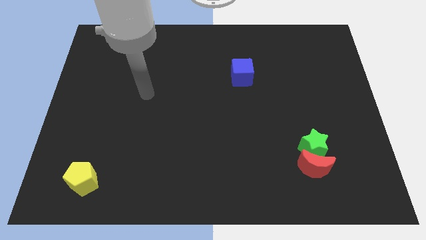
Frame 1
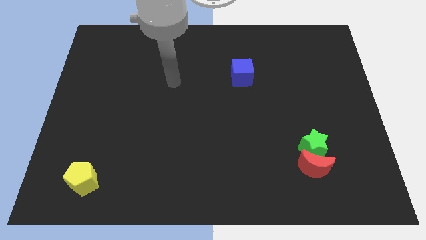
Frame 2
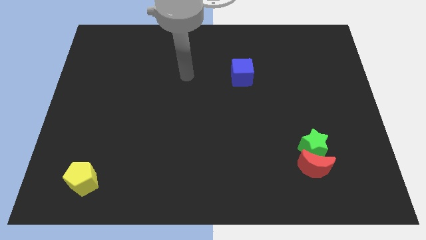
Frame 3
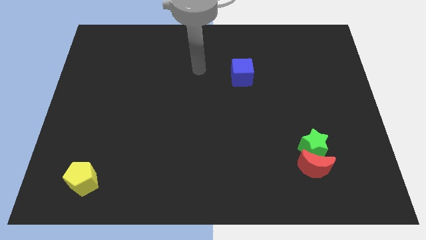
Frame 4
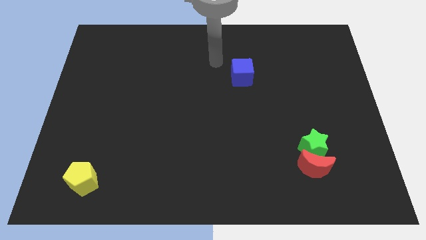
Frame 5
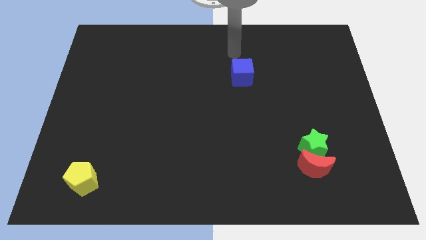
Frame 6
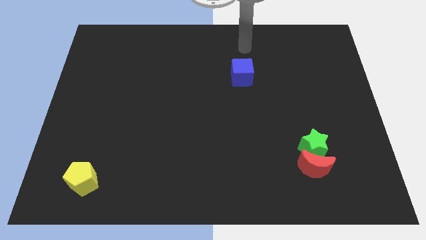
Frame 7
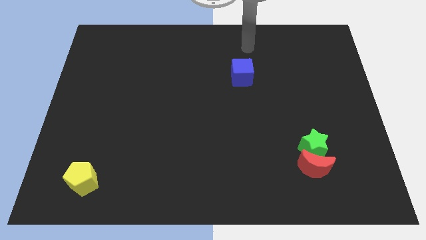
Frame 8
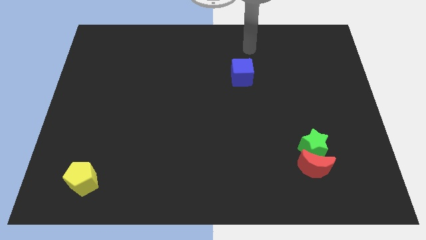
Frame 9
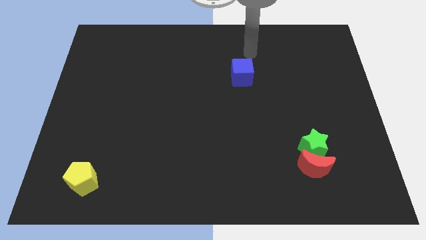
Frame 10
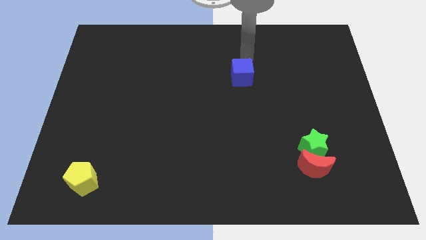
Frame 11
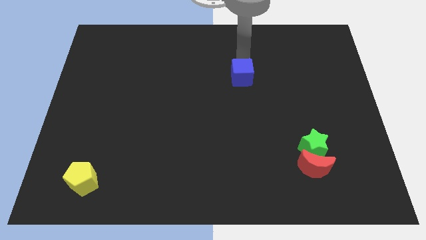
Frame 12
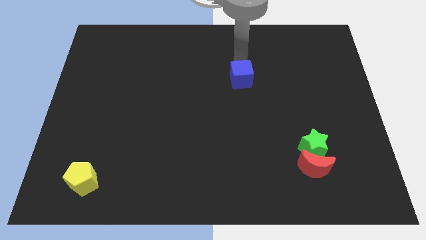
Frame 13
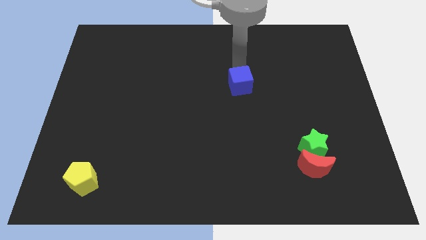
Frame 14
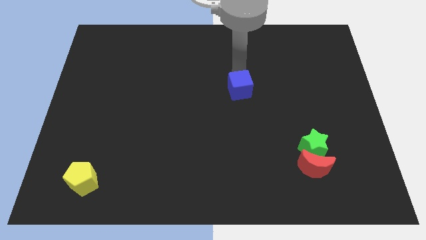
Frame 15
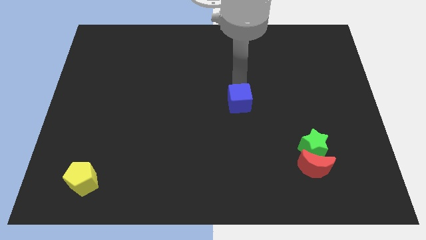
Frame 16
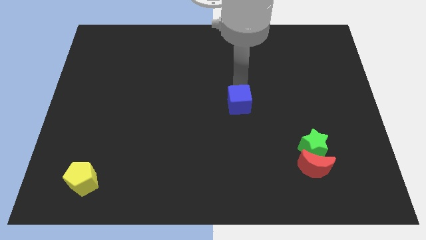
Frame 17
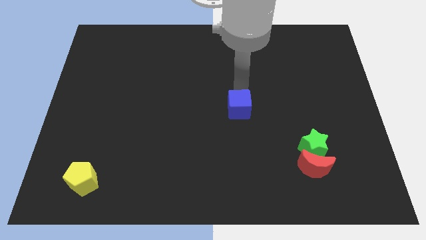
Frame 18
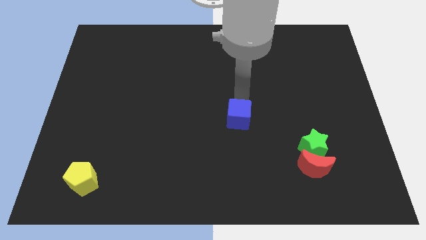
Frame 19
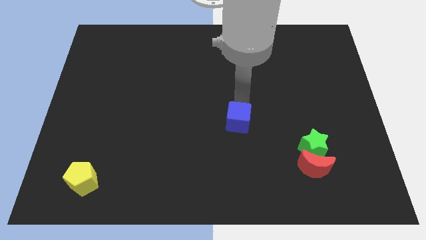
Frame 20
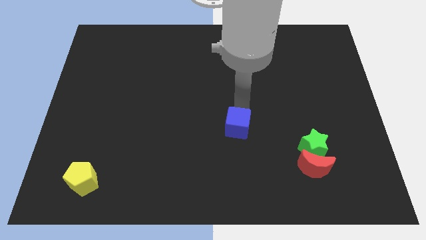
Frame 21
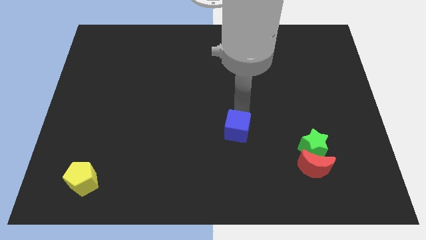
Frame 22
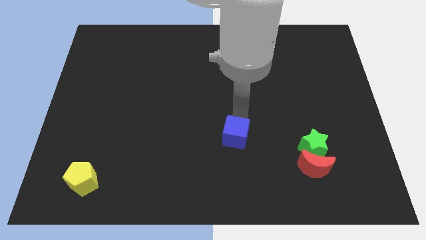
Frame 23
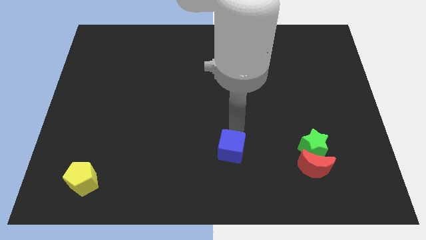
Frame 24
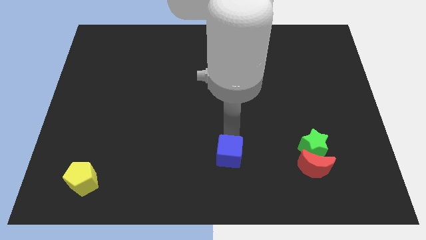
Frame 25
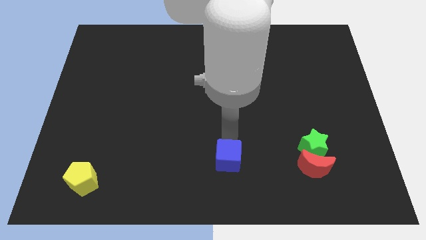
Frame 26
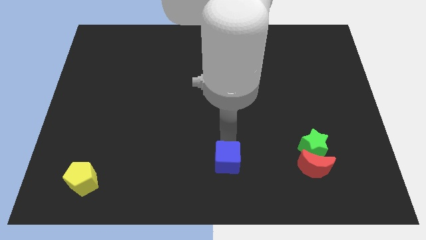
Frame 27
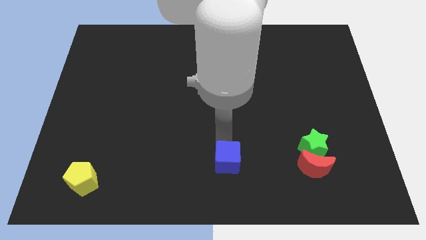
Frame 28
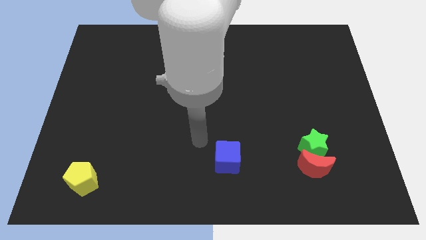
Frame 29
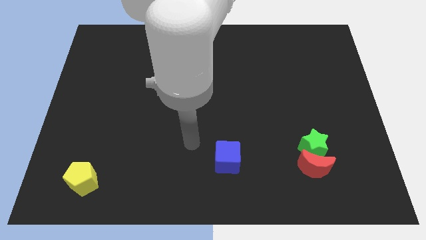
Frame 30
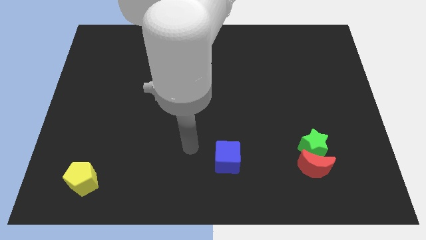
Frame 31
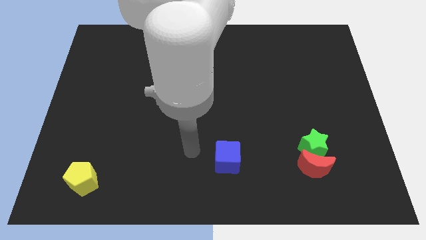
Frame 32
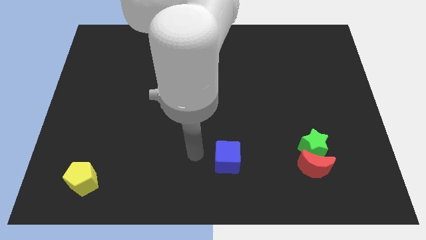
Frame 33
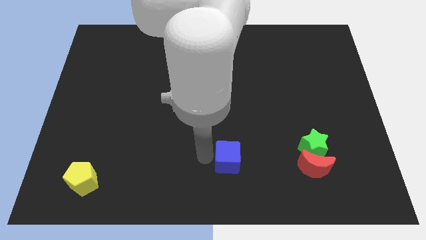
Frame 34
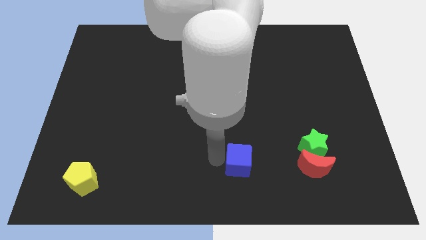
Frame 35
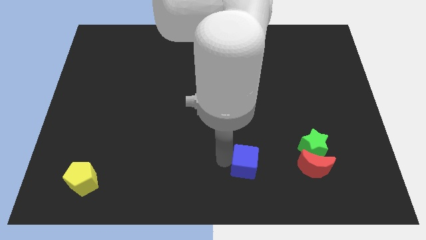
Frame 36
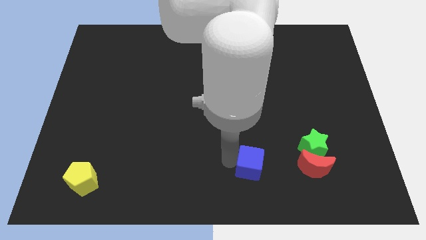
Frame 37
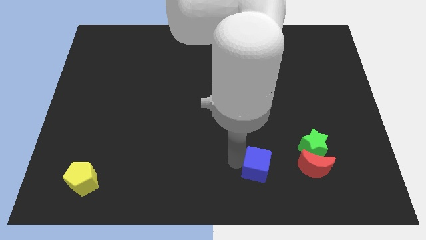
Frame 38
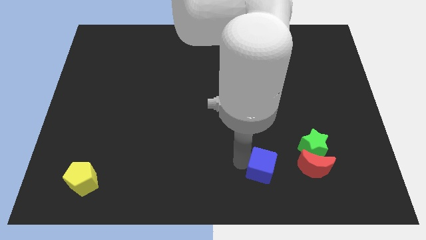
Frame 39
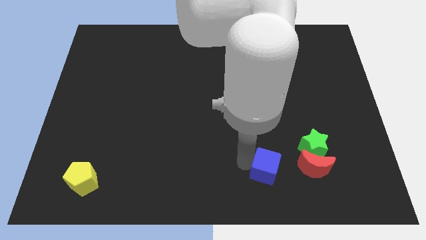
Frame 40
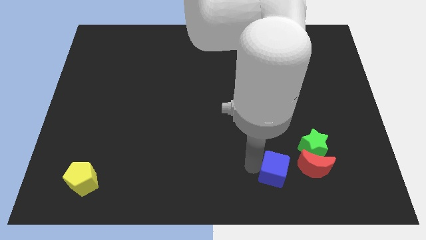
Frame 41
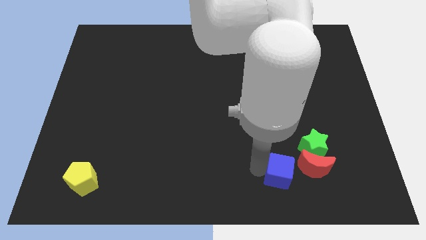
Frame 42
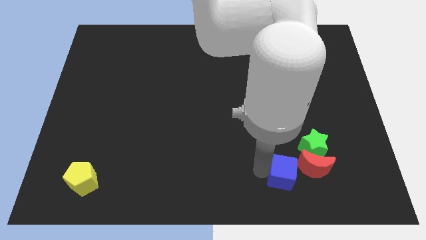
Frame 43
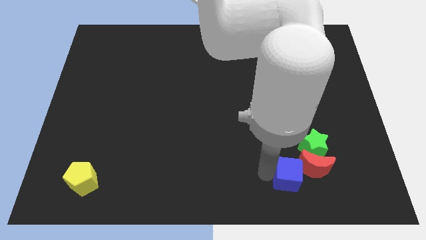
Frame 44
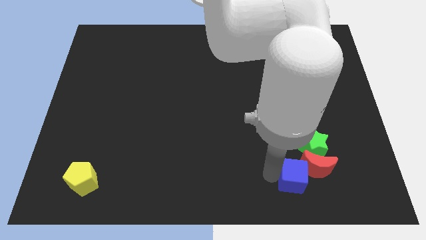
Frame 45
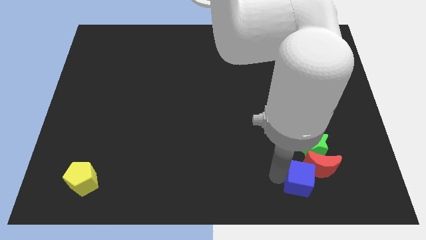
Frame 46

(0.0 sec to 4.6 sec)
put the blue cube next to the red moon

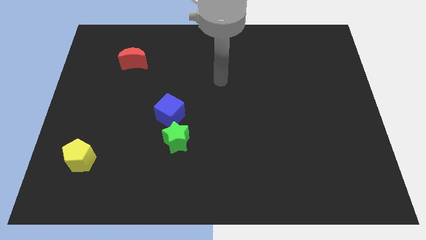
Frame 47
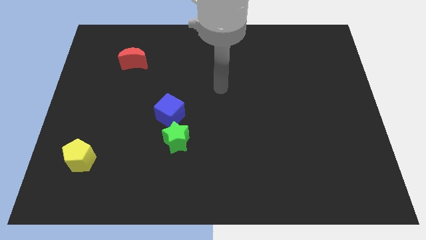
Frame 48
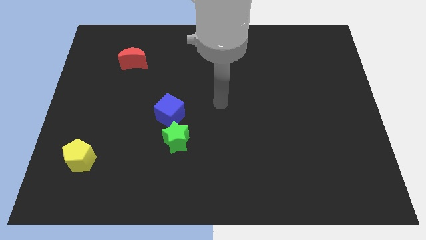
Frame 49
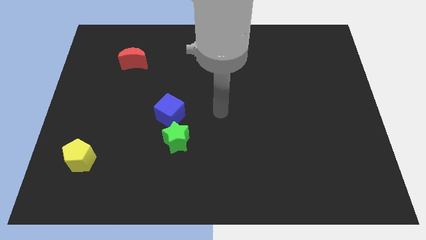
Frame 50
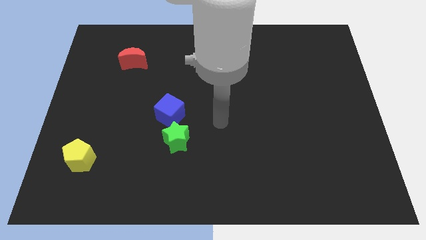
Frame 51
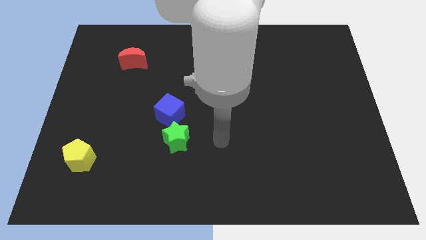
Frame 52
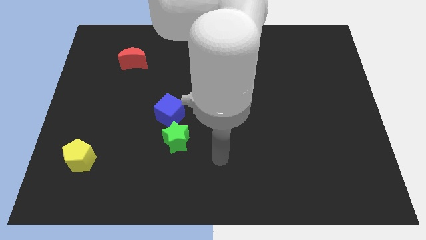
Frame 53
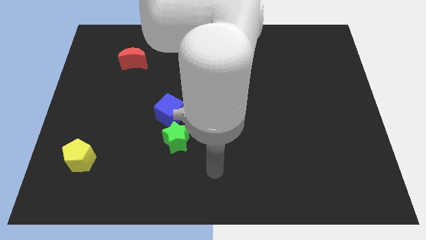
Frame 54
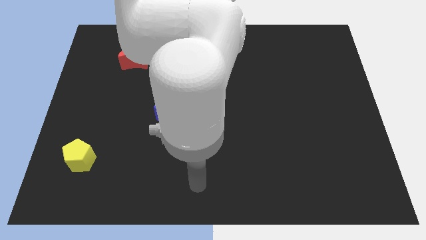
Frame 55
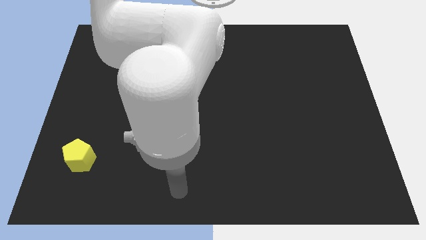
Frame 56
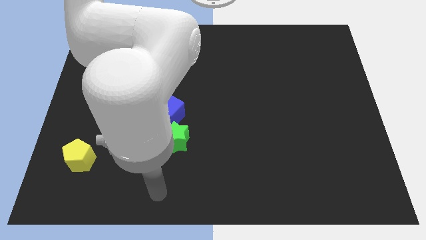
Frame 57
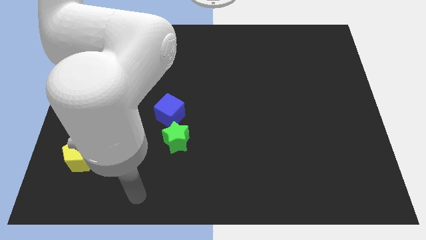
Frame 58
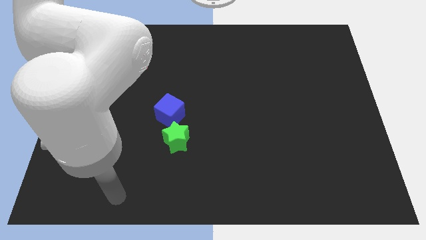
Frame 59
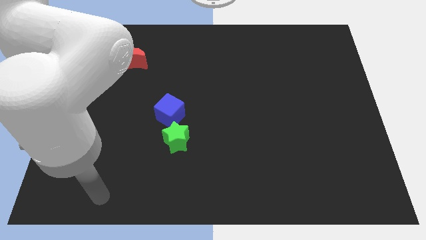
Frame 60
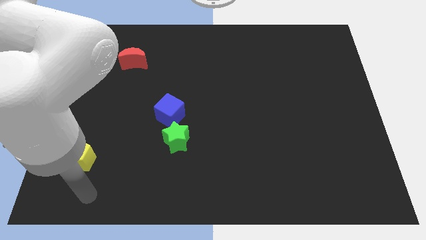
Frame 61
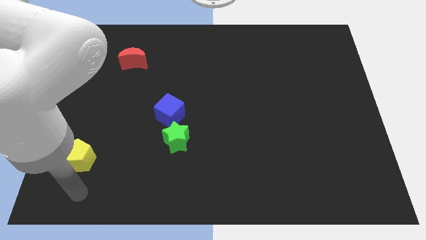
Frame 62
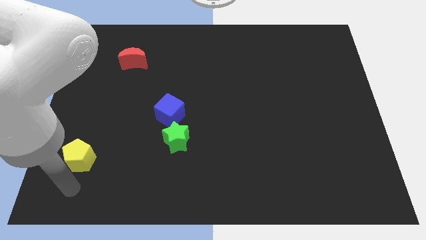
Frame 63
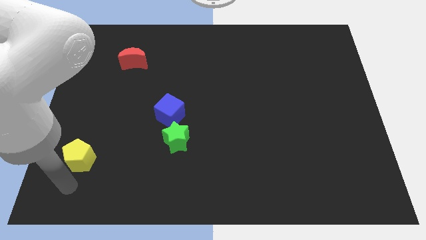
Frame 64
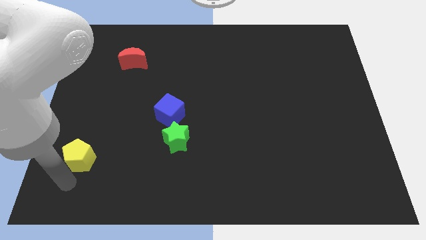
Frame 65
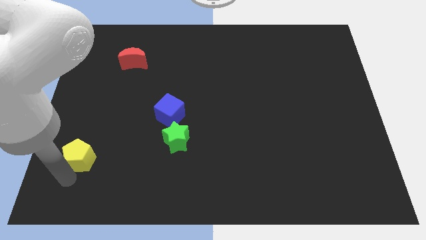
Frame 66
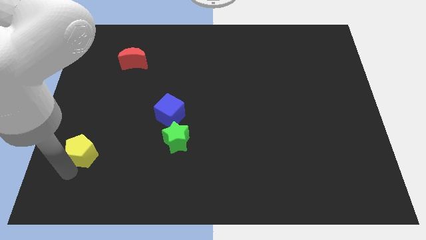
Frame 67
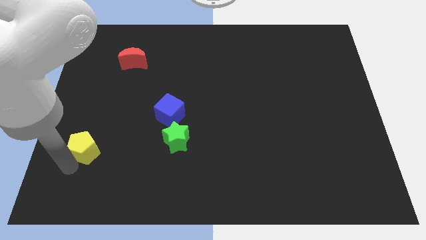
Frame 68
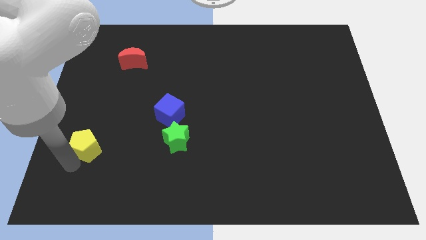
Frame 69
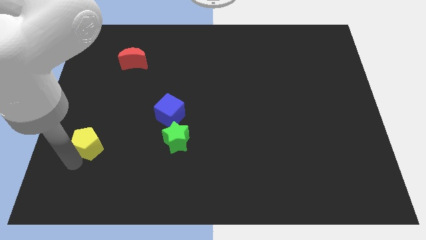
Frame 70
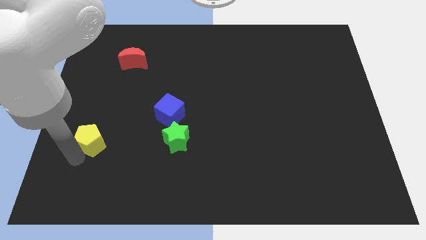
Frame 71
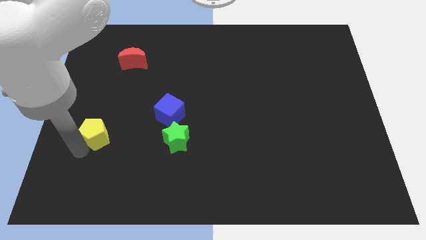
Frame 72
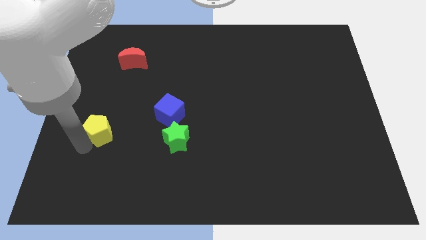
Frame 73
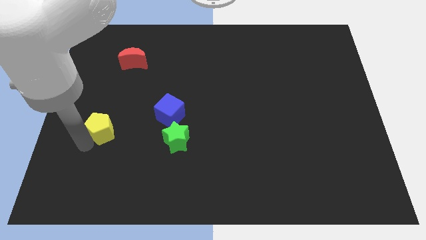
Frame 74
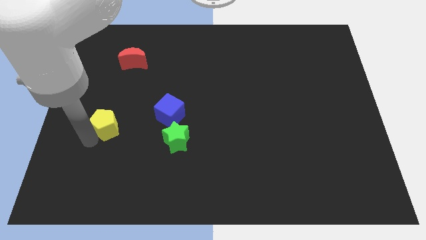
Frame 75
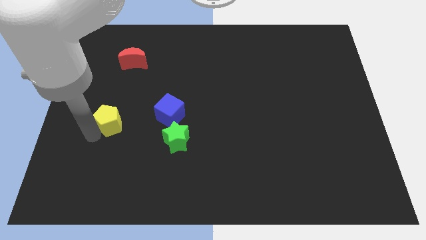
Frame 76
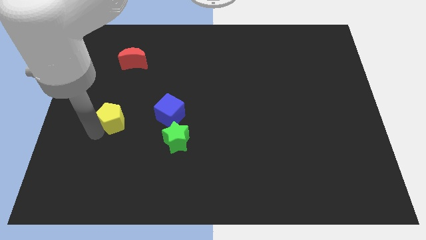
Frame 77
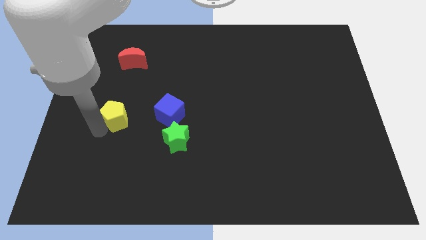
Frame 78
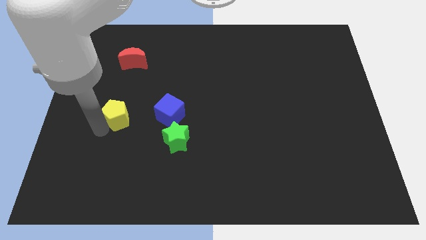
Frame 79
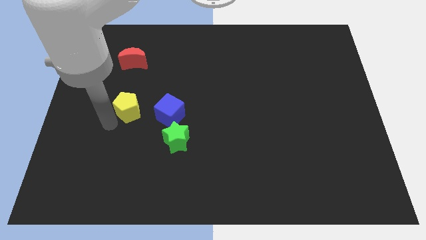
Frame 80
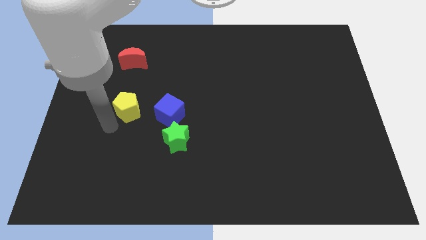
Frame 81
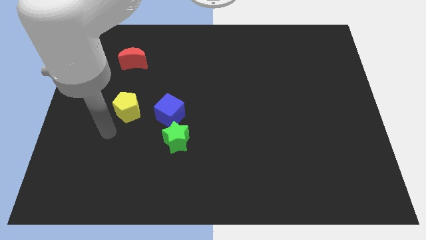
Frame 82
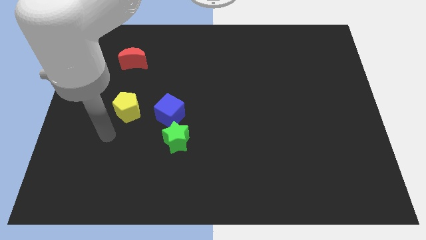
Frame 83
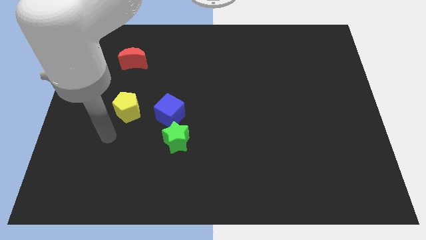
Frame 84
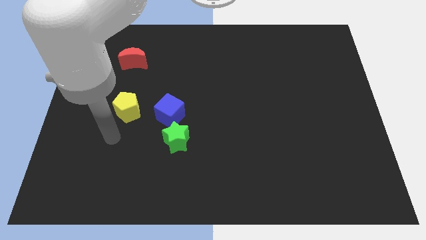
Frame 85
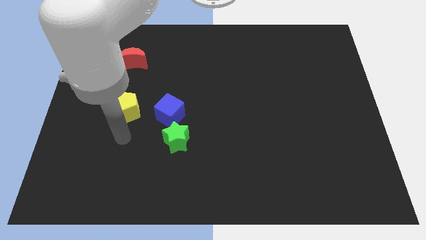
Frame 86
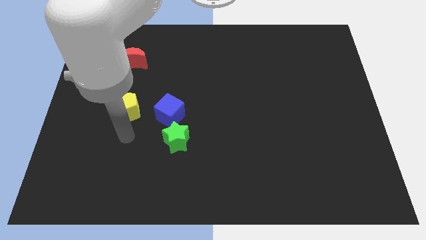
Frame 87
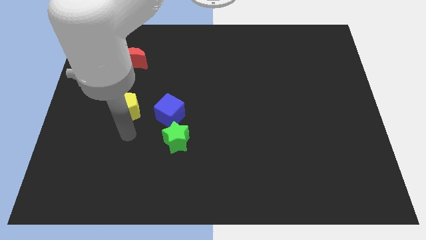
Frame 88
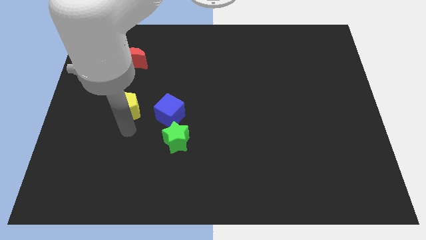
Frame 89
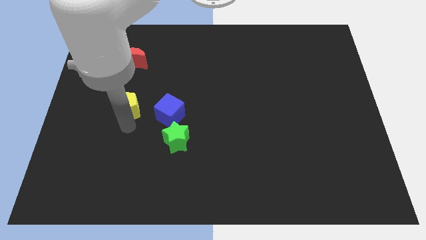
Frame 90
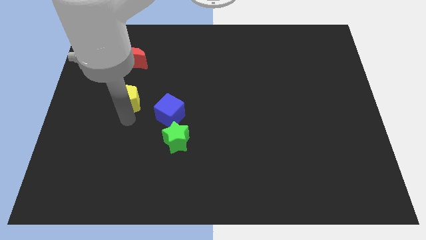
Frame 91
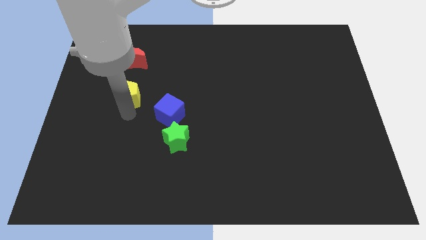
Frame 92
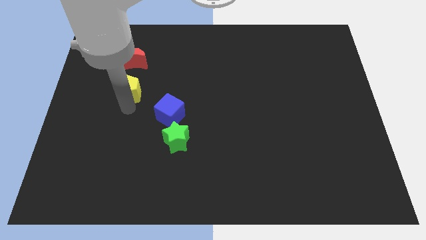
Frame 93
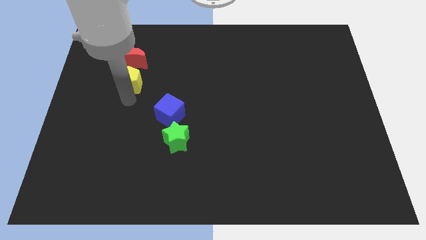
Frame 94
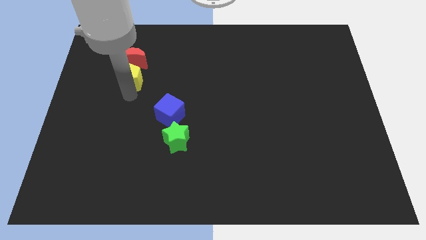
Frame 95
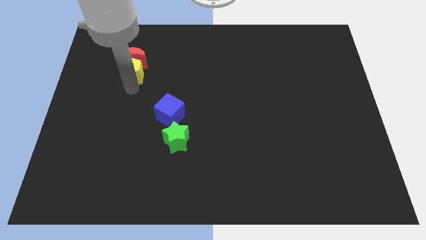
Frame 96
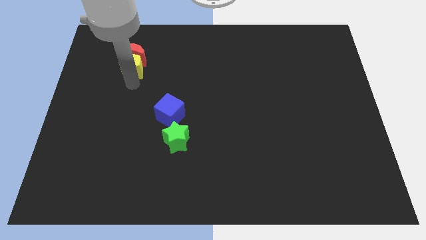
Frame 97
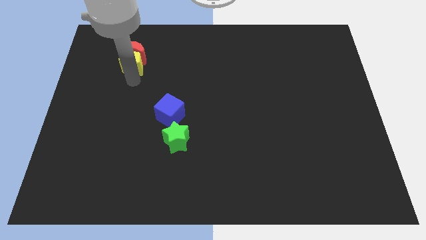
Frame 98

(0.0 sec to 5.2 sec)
slide the yellow pentagon next to the red moon
